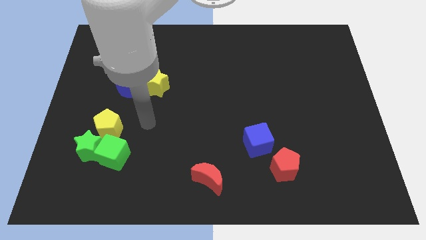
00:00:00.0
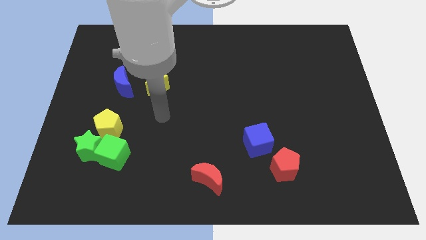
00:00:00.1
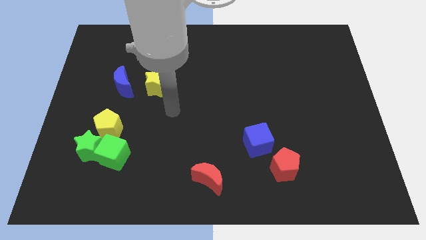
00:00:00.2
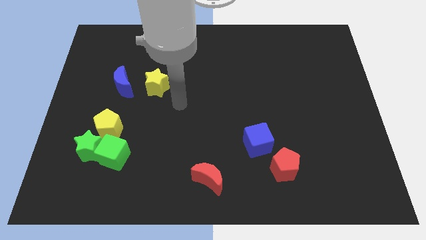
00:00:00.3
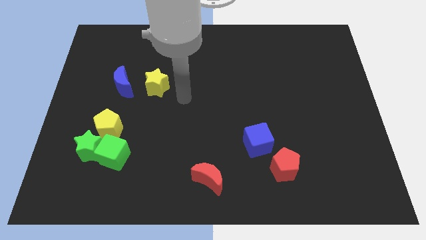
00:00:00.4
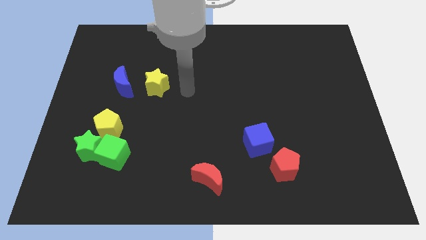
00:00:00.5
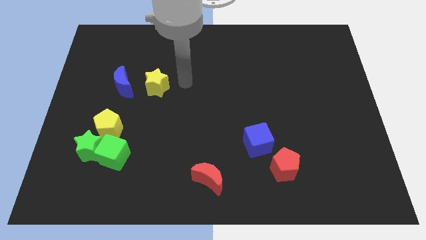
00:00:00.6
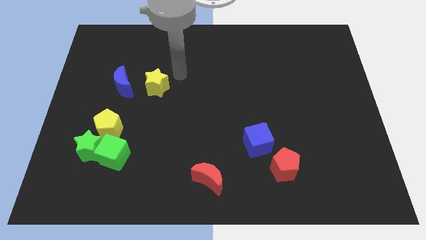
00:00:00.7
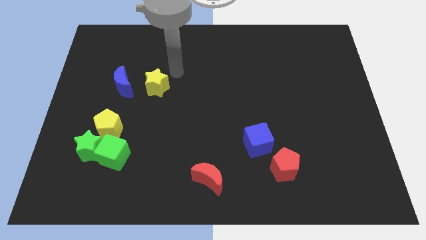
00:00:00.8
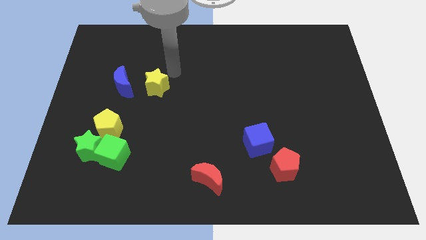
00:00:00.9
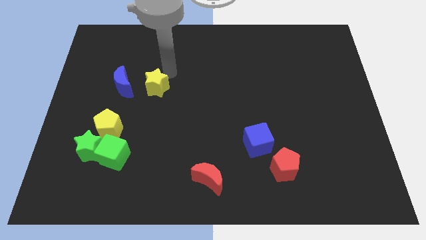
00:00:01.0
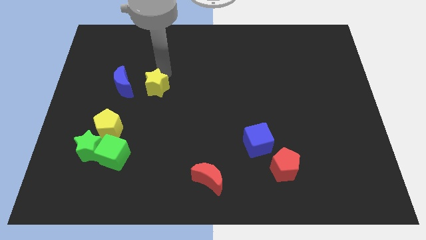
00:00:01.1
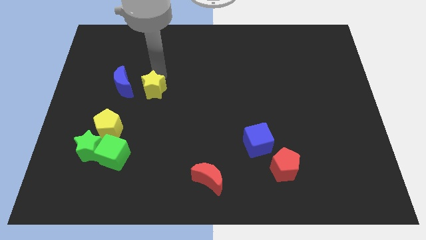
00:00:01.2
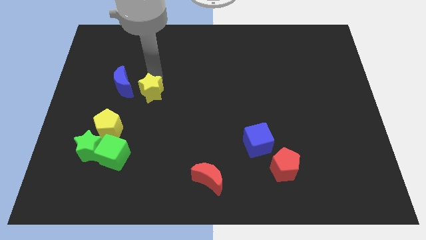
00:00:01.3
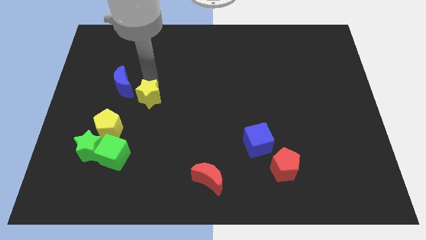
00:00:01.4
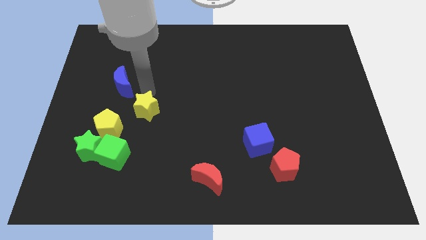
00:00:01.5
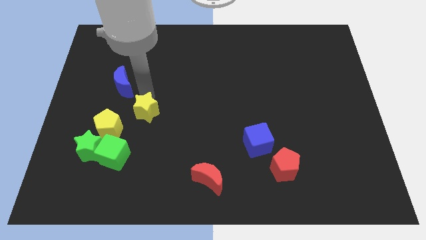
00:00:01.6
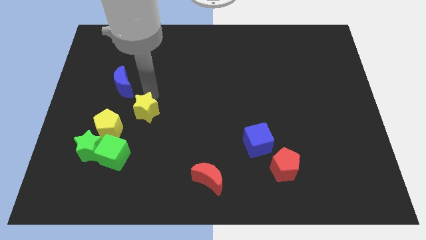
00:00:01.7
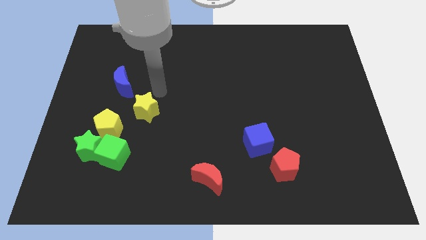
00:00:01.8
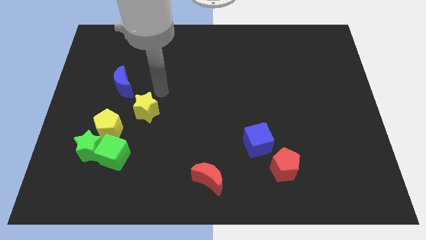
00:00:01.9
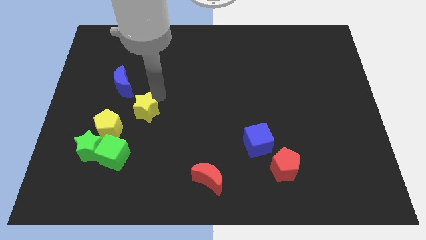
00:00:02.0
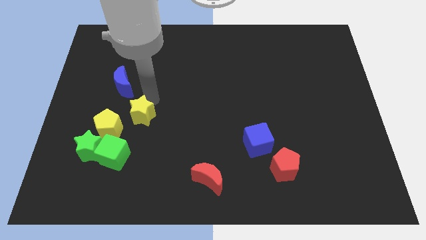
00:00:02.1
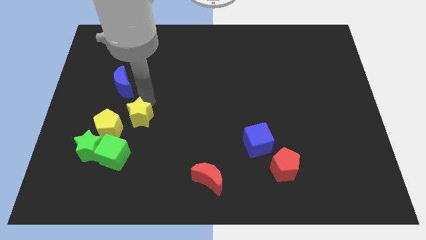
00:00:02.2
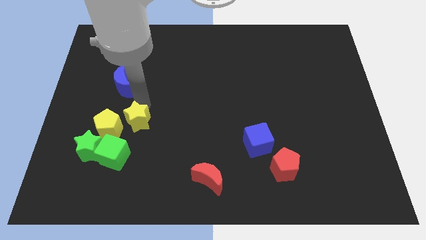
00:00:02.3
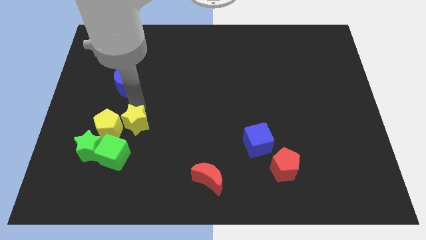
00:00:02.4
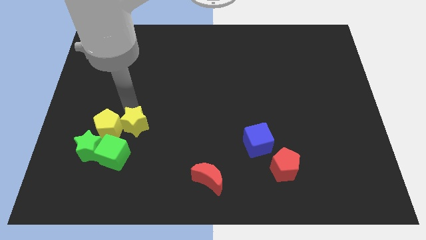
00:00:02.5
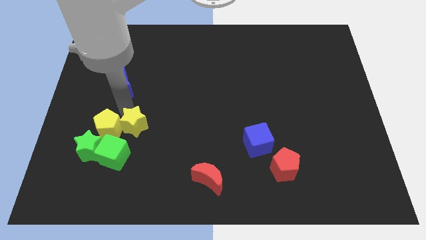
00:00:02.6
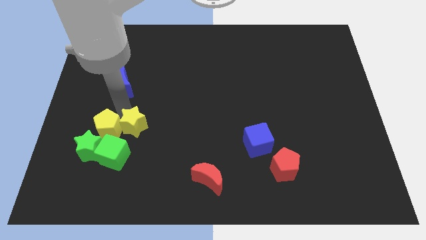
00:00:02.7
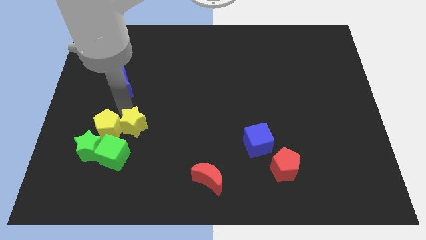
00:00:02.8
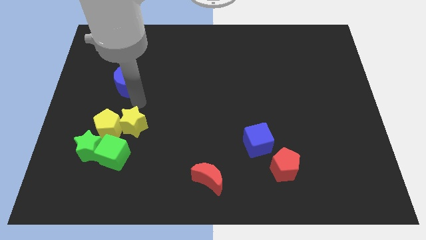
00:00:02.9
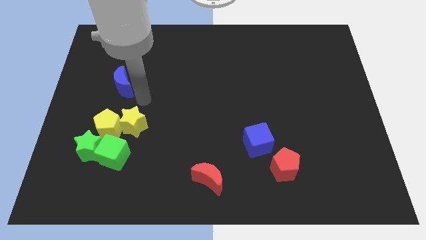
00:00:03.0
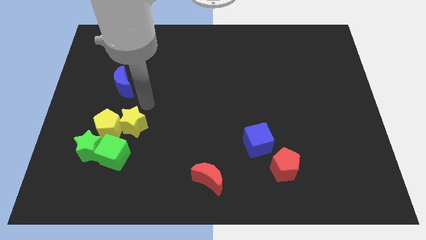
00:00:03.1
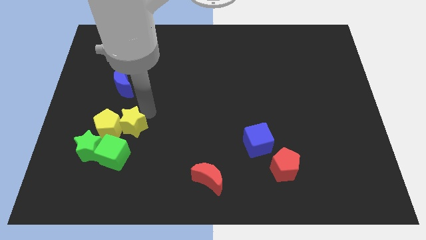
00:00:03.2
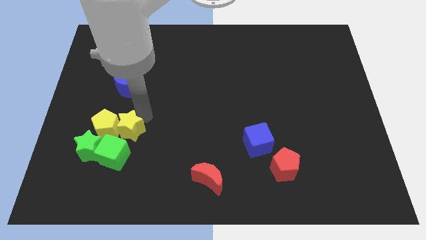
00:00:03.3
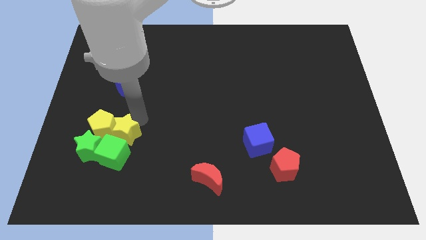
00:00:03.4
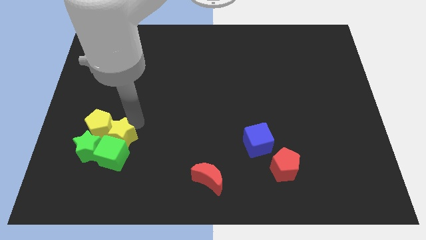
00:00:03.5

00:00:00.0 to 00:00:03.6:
move the yellow star to the right of yellow pentagon

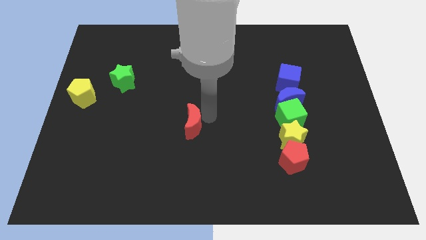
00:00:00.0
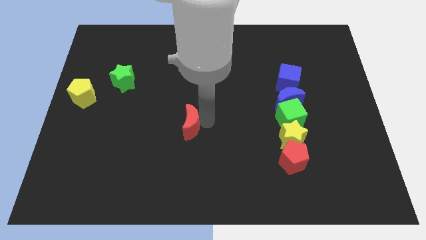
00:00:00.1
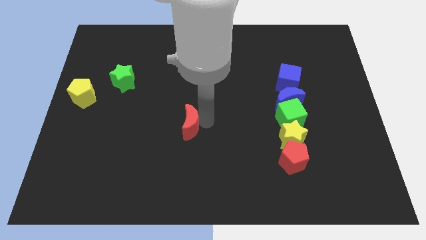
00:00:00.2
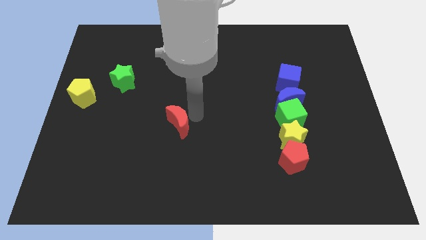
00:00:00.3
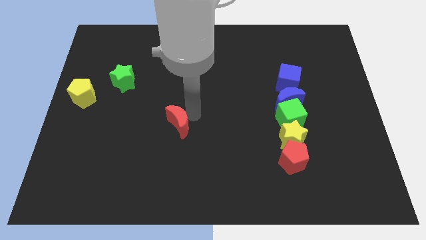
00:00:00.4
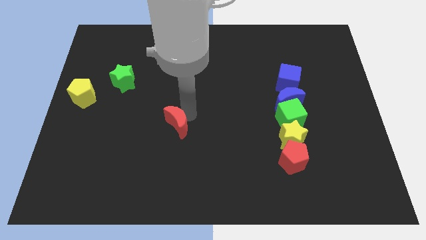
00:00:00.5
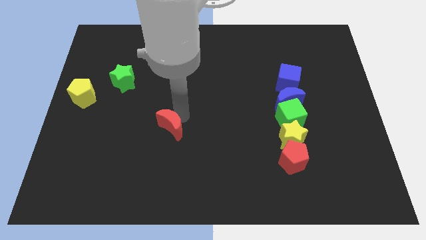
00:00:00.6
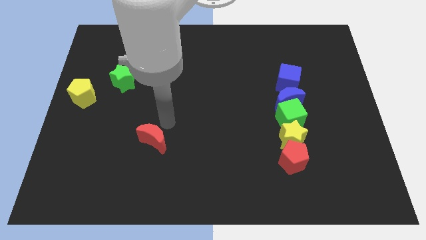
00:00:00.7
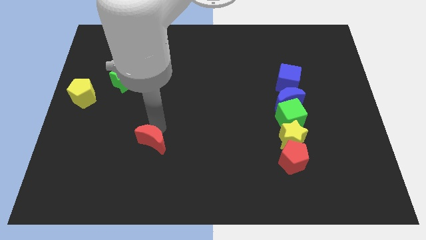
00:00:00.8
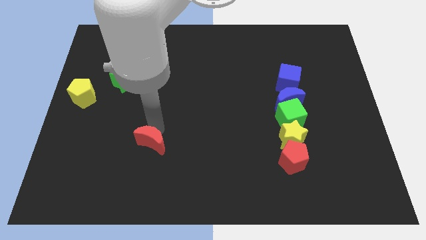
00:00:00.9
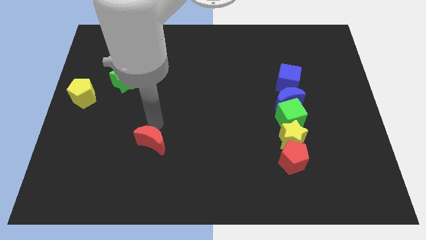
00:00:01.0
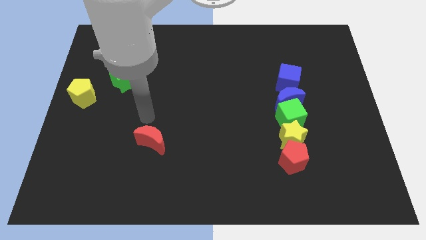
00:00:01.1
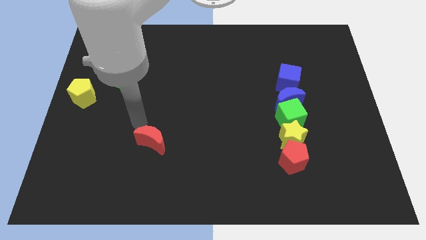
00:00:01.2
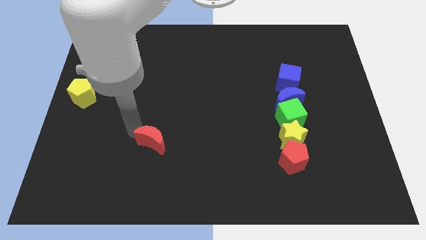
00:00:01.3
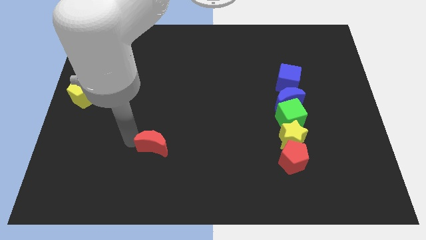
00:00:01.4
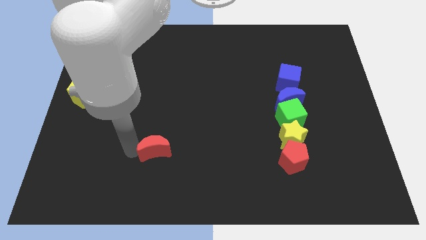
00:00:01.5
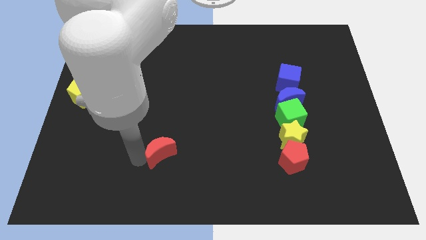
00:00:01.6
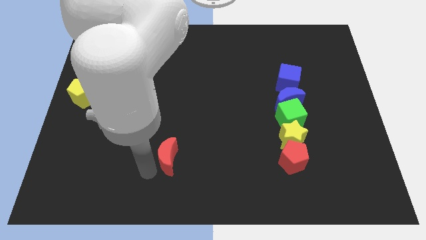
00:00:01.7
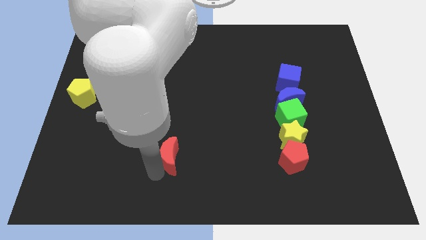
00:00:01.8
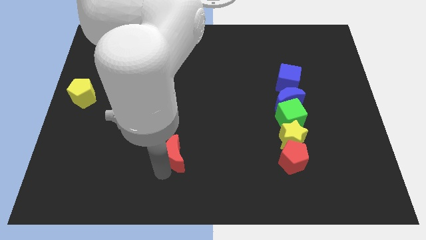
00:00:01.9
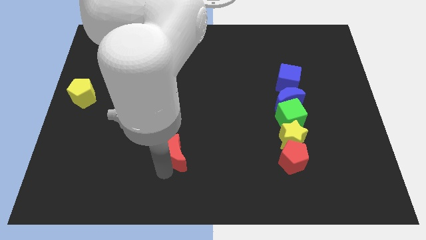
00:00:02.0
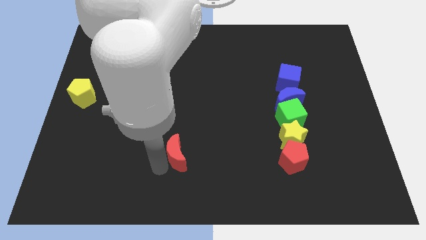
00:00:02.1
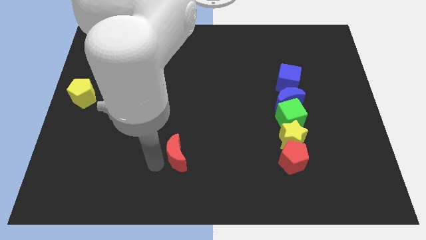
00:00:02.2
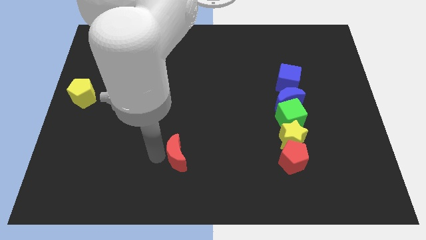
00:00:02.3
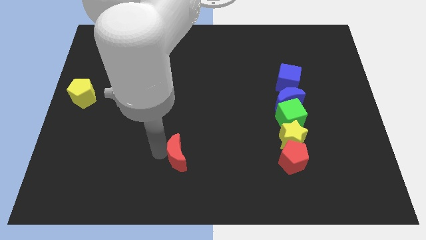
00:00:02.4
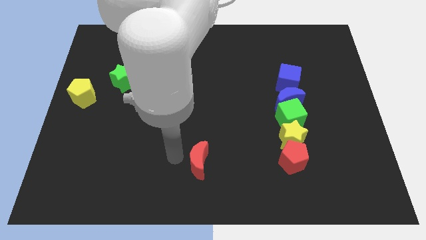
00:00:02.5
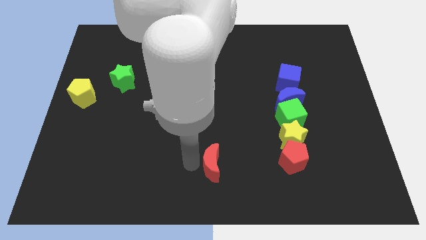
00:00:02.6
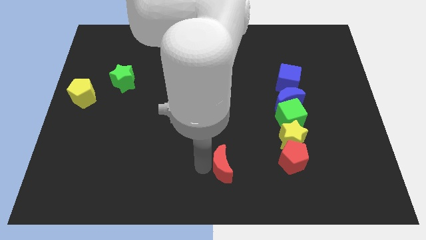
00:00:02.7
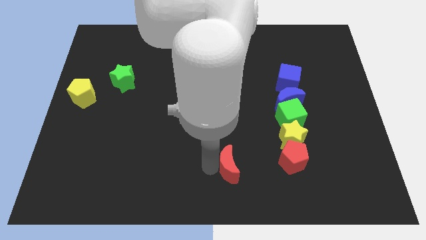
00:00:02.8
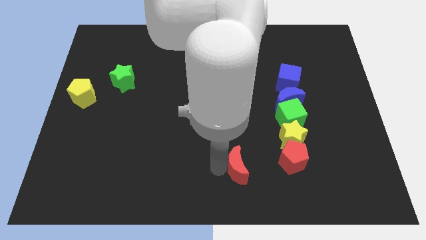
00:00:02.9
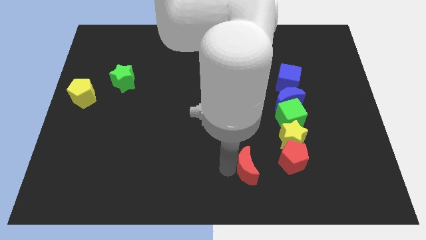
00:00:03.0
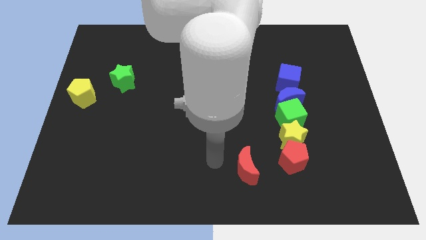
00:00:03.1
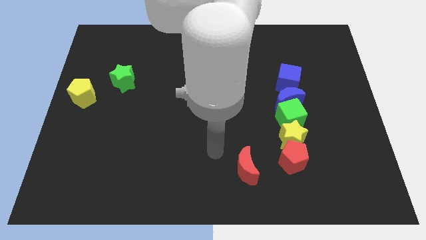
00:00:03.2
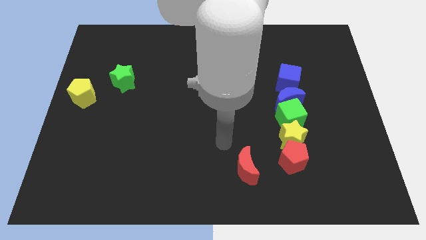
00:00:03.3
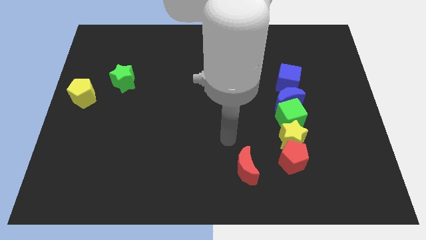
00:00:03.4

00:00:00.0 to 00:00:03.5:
push the red crescent towards the red pentagon

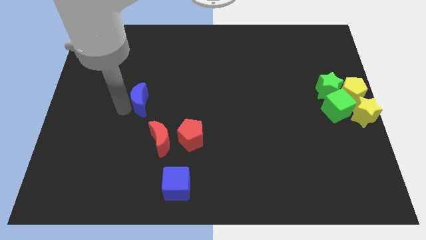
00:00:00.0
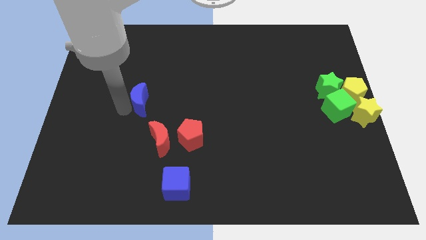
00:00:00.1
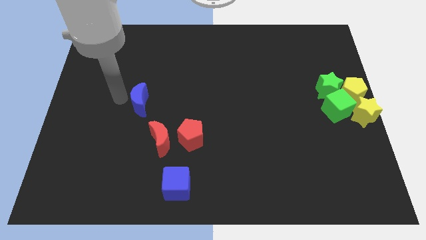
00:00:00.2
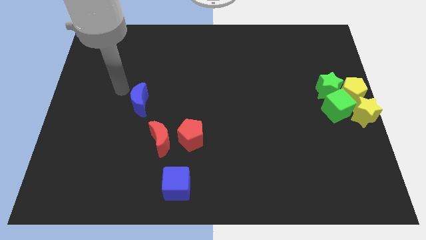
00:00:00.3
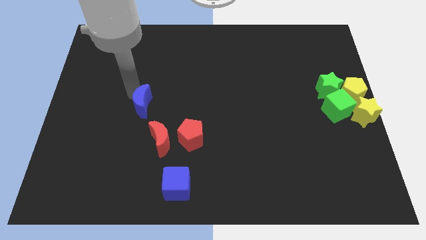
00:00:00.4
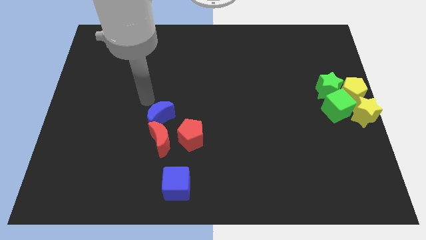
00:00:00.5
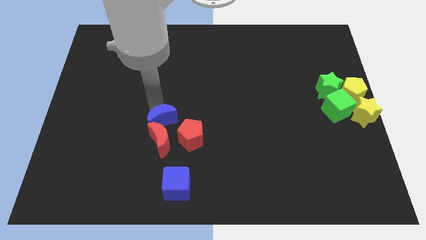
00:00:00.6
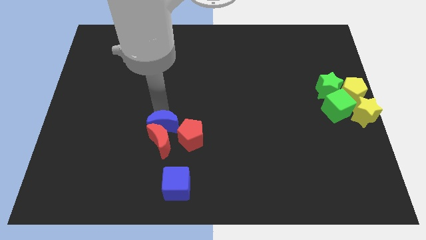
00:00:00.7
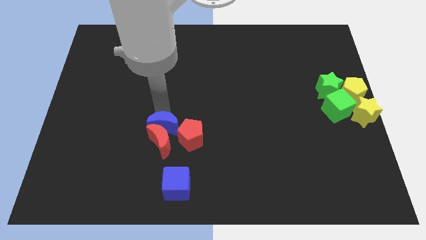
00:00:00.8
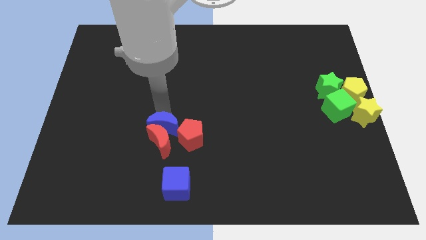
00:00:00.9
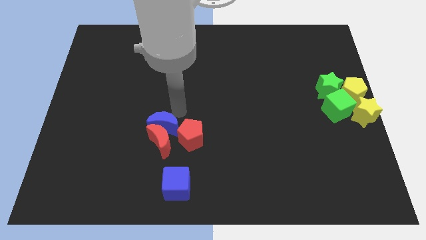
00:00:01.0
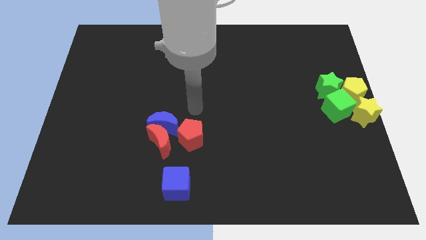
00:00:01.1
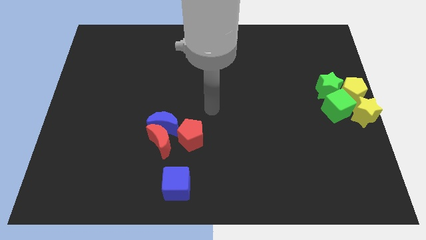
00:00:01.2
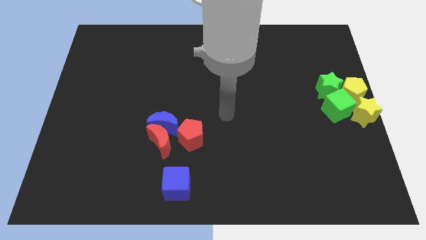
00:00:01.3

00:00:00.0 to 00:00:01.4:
push the blue crescent into the red crescent

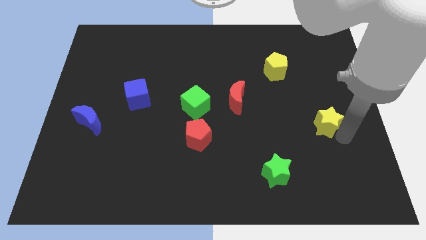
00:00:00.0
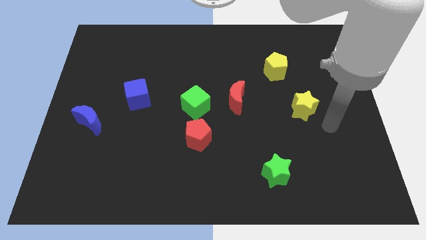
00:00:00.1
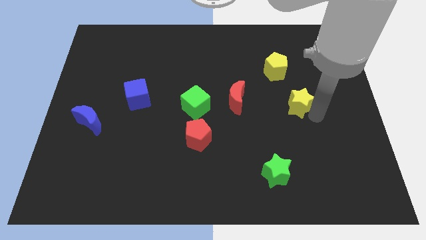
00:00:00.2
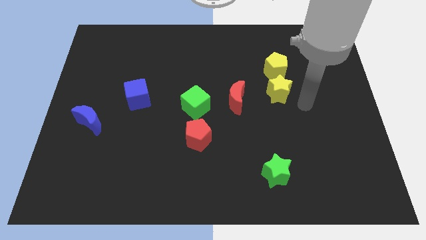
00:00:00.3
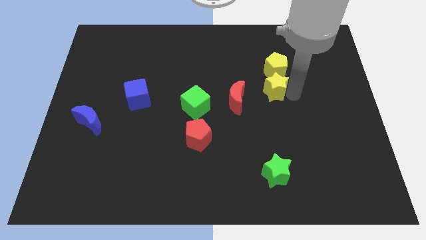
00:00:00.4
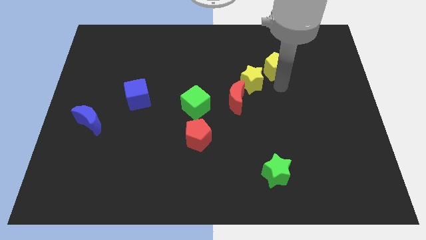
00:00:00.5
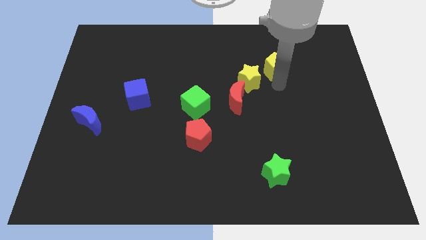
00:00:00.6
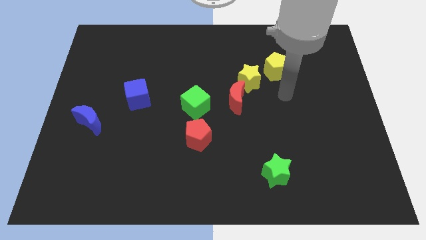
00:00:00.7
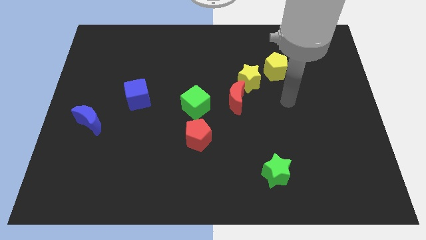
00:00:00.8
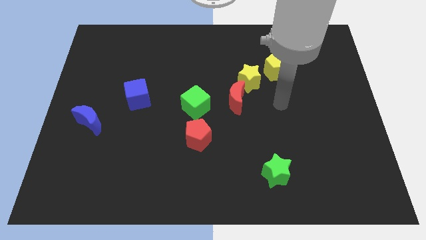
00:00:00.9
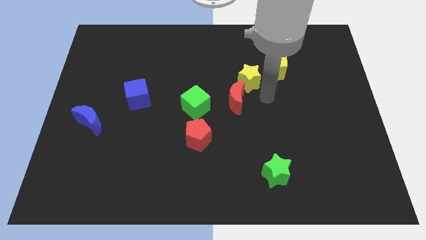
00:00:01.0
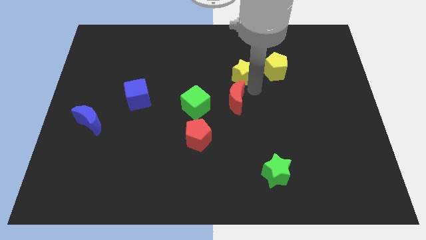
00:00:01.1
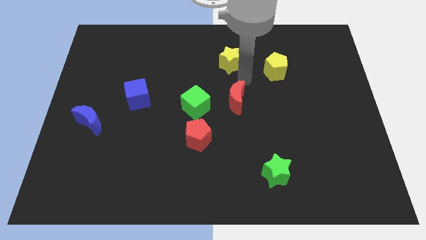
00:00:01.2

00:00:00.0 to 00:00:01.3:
move the yellow star to the top of the red crescent
